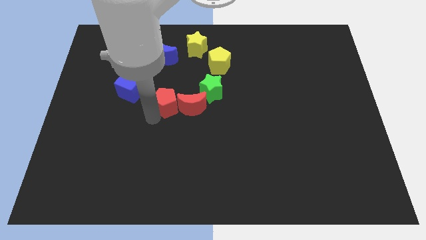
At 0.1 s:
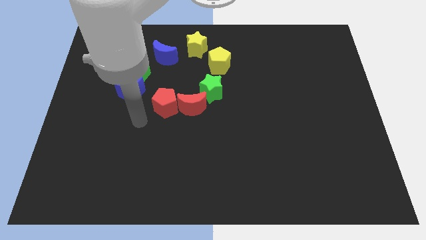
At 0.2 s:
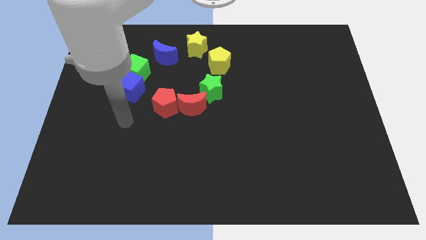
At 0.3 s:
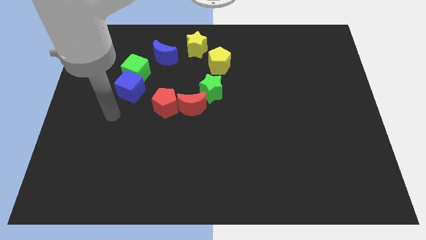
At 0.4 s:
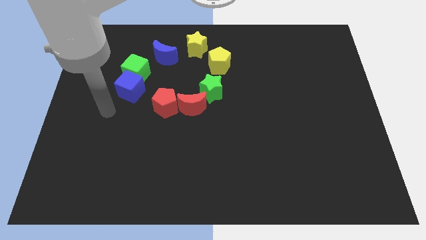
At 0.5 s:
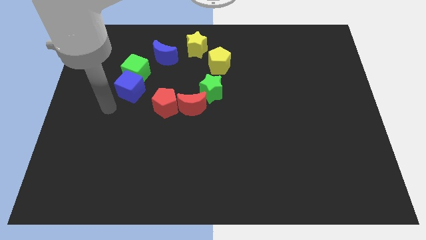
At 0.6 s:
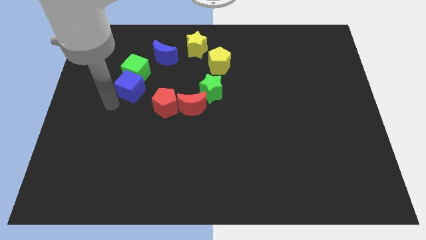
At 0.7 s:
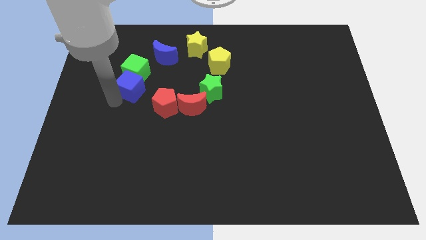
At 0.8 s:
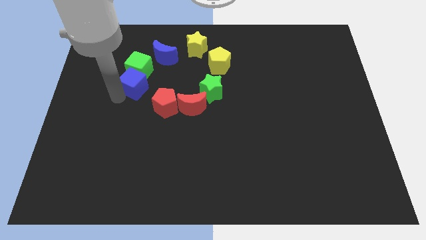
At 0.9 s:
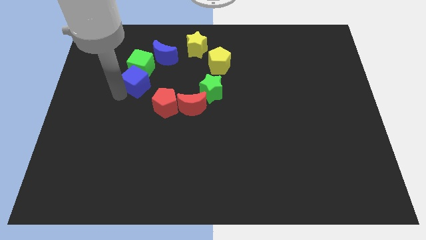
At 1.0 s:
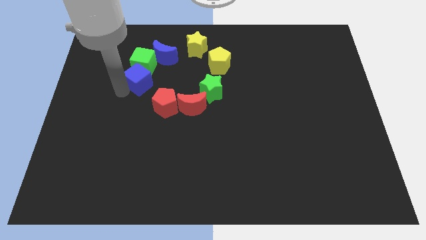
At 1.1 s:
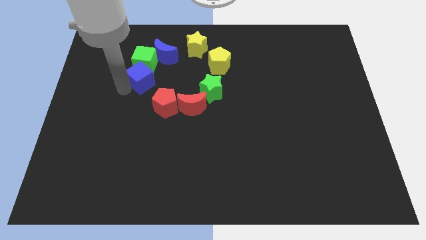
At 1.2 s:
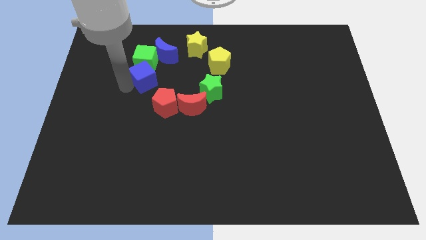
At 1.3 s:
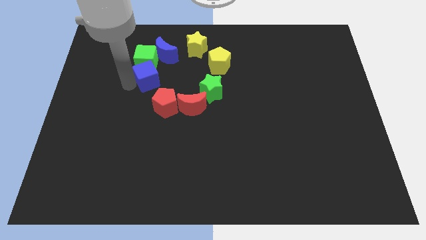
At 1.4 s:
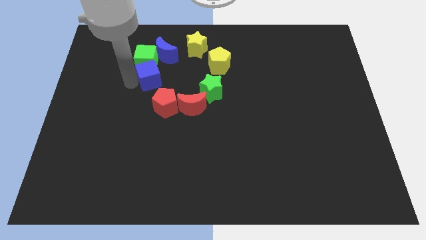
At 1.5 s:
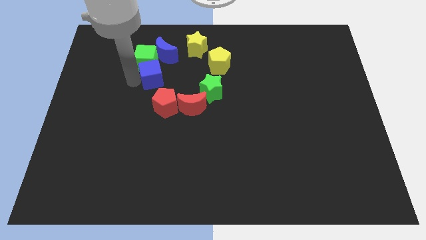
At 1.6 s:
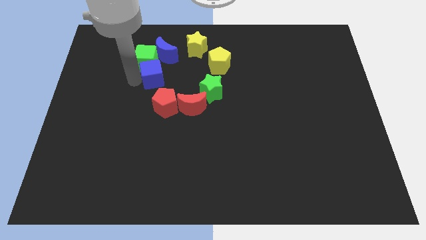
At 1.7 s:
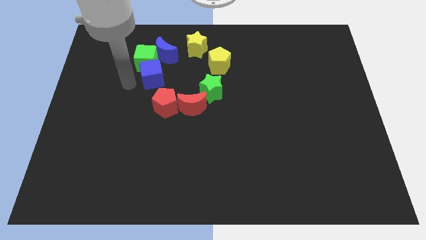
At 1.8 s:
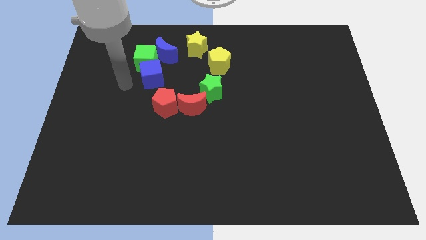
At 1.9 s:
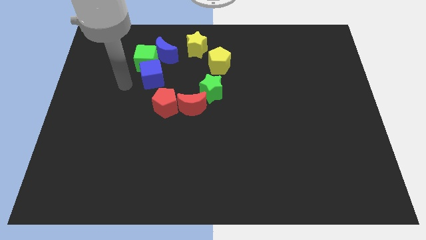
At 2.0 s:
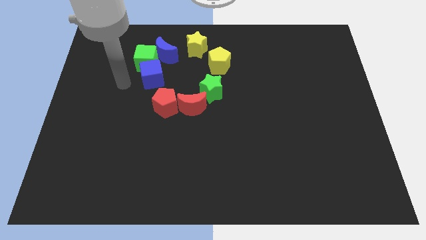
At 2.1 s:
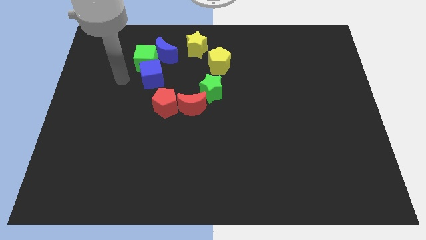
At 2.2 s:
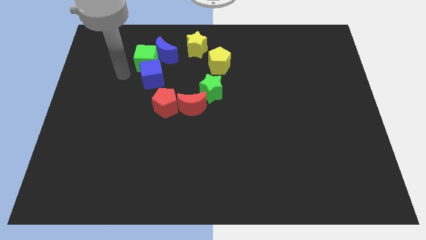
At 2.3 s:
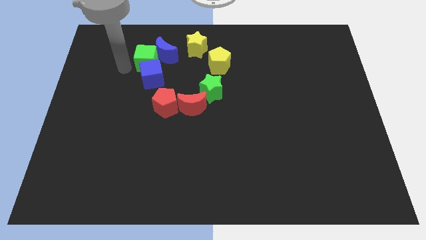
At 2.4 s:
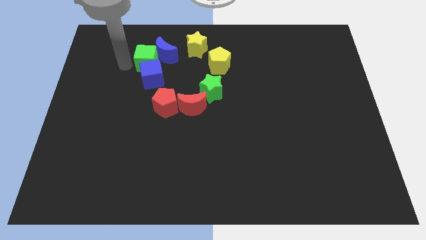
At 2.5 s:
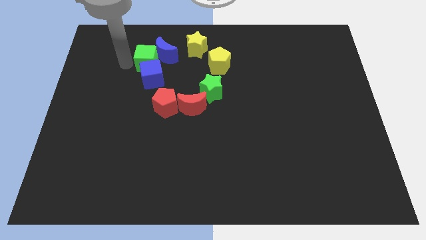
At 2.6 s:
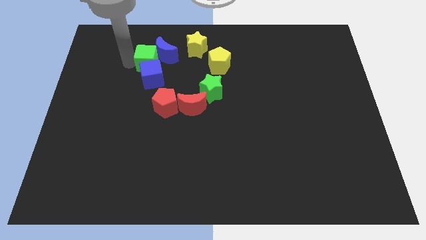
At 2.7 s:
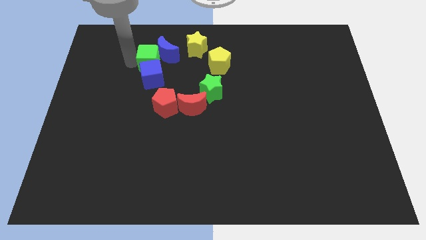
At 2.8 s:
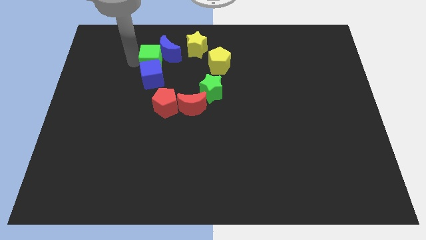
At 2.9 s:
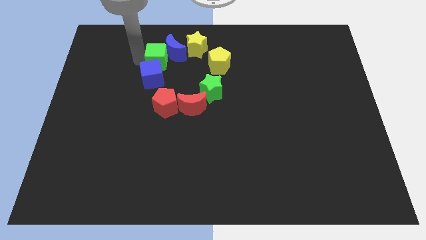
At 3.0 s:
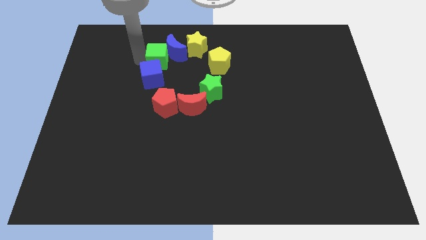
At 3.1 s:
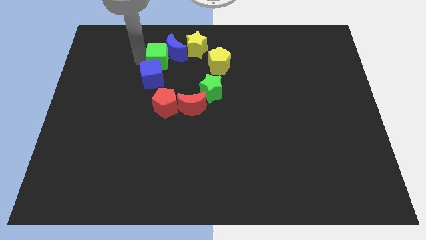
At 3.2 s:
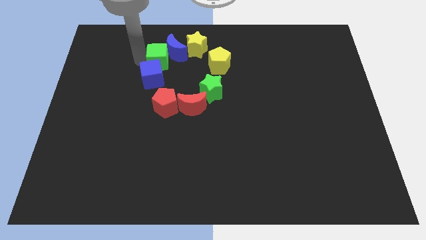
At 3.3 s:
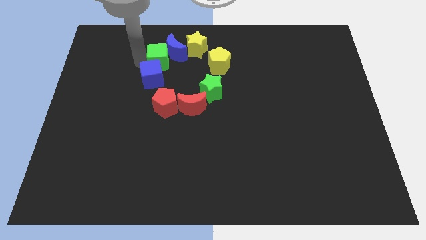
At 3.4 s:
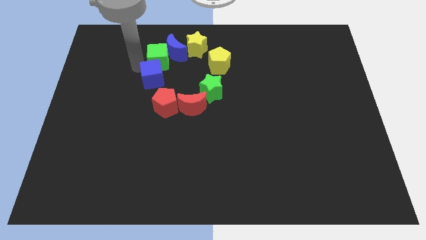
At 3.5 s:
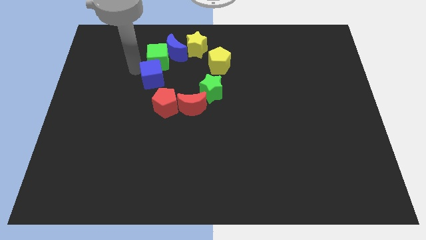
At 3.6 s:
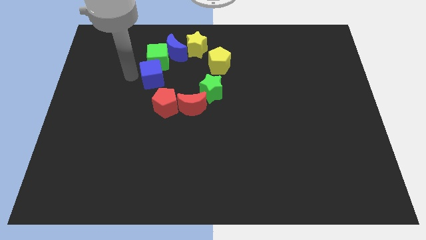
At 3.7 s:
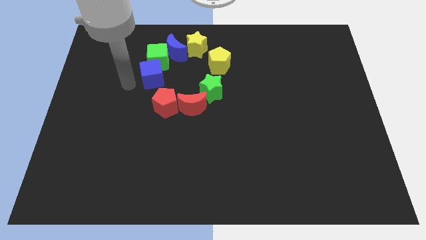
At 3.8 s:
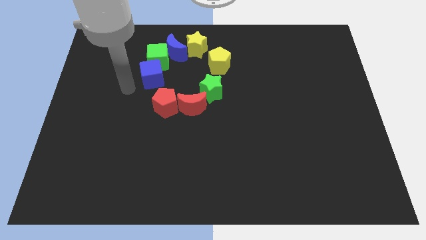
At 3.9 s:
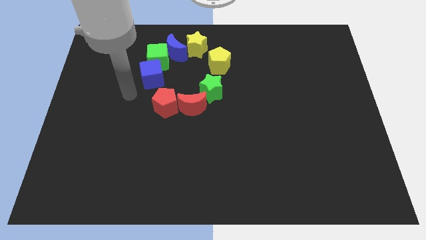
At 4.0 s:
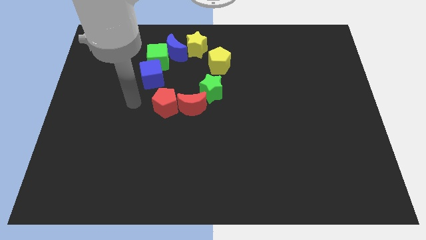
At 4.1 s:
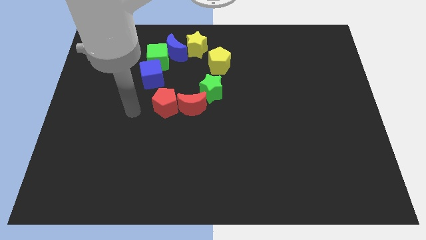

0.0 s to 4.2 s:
push the blue cube and green cube upwards together slightly

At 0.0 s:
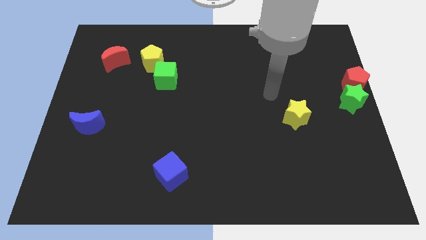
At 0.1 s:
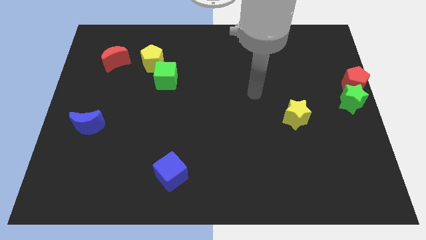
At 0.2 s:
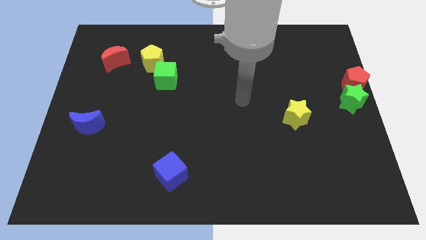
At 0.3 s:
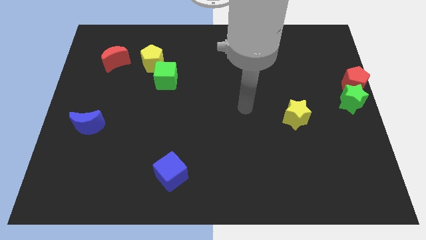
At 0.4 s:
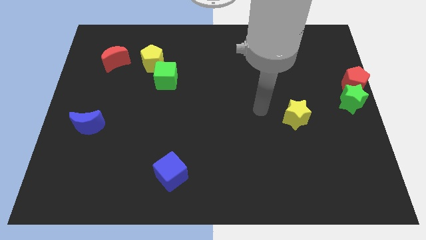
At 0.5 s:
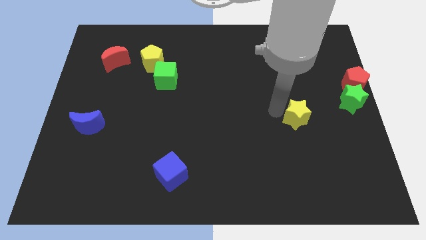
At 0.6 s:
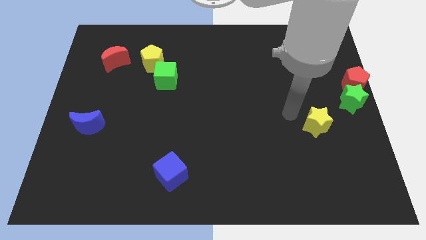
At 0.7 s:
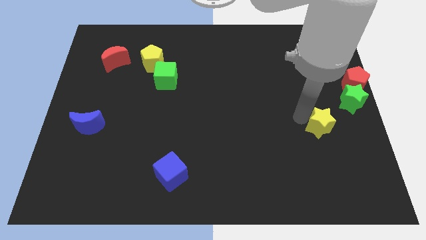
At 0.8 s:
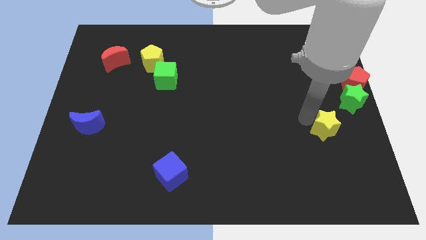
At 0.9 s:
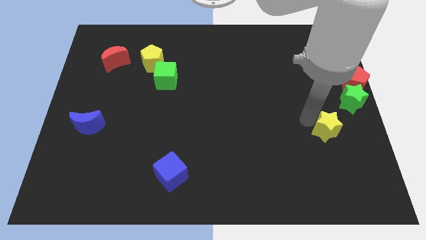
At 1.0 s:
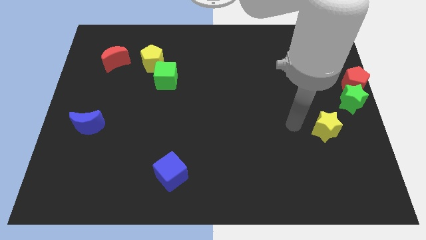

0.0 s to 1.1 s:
place the yellow star horizontally to the right side of the blue crescent

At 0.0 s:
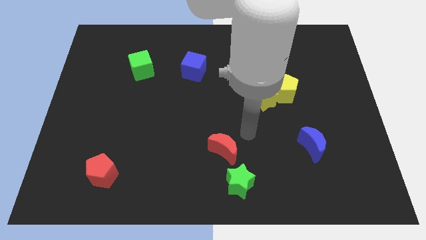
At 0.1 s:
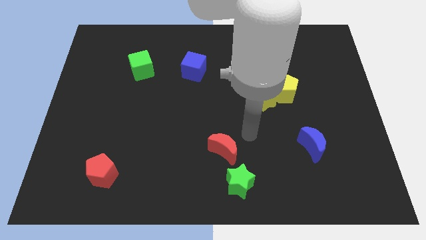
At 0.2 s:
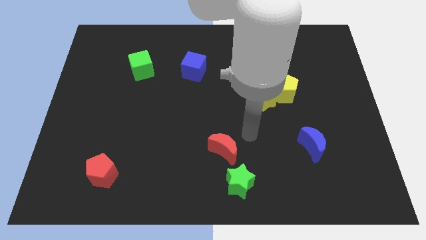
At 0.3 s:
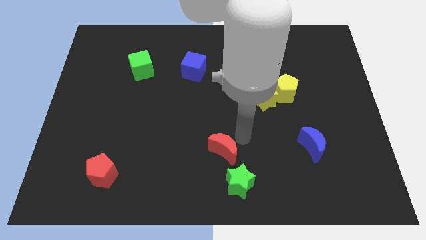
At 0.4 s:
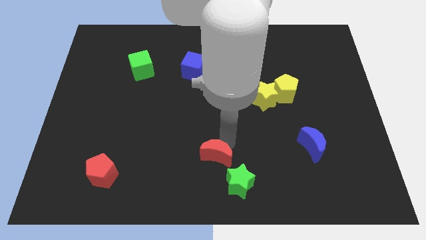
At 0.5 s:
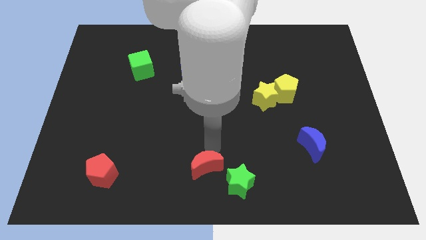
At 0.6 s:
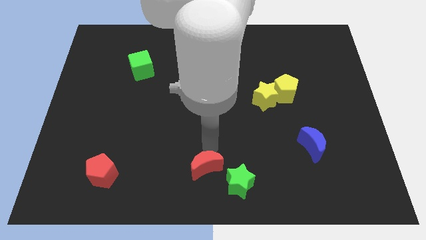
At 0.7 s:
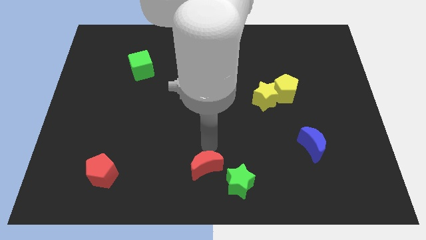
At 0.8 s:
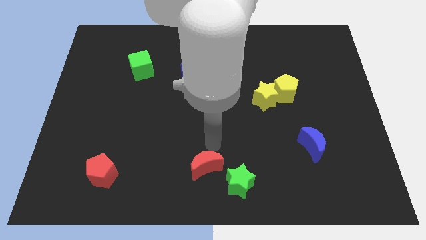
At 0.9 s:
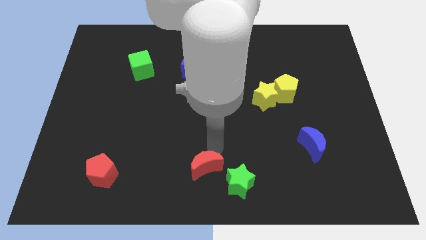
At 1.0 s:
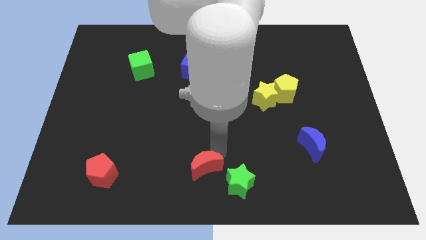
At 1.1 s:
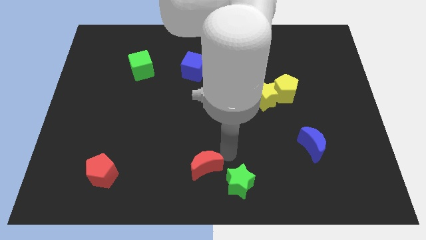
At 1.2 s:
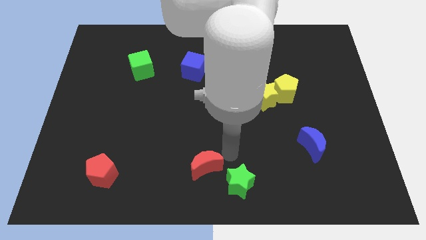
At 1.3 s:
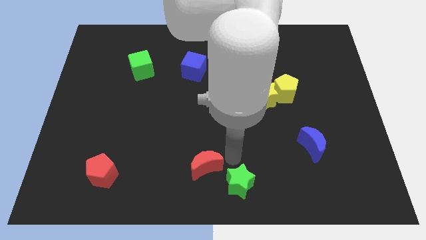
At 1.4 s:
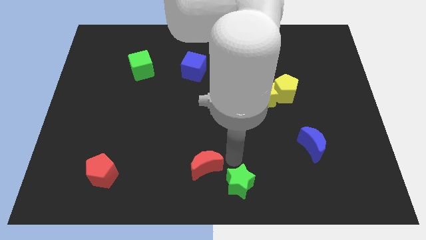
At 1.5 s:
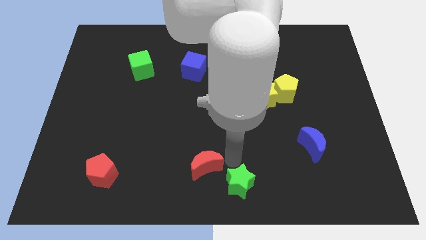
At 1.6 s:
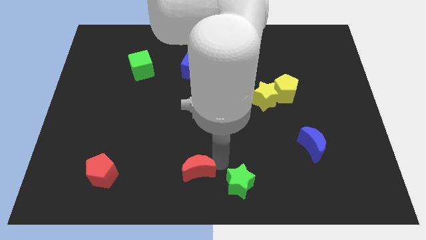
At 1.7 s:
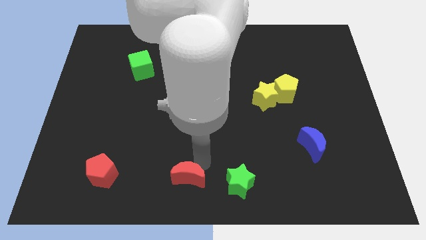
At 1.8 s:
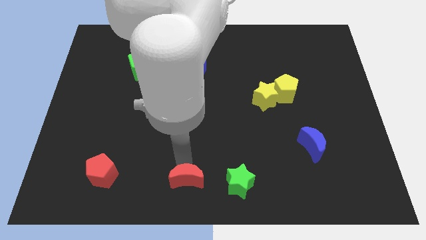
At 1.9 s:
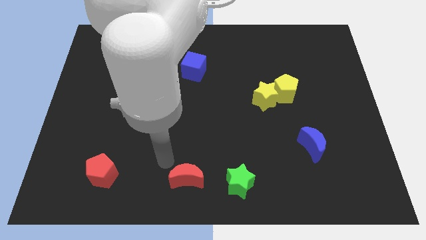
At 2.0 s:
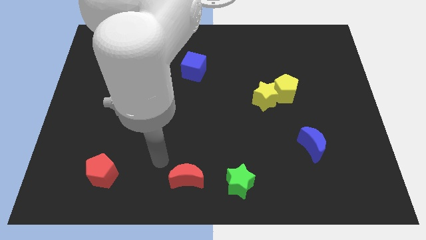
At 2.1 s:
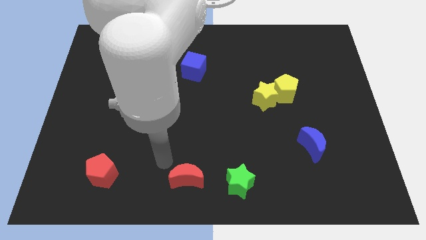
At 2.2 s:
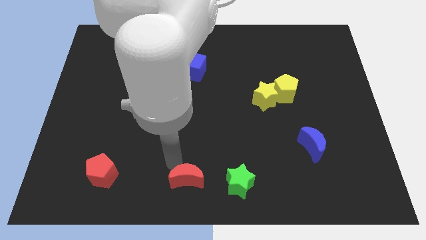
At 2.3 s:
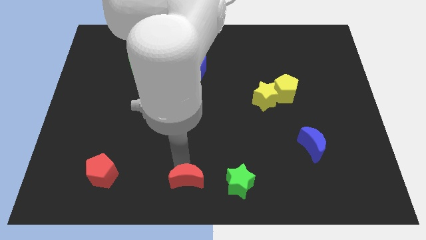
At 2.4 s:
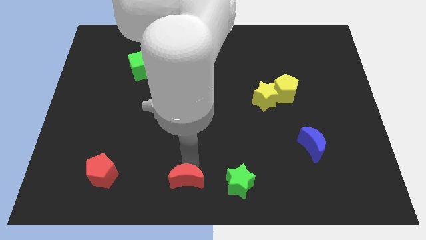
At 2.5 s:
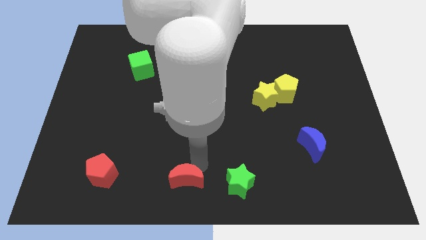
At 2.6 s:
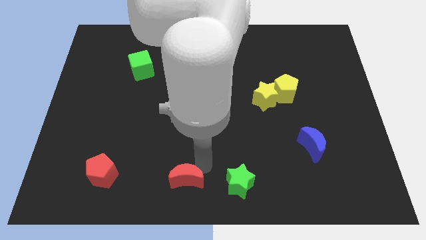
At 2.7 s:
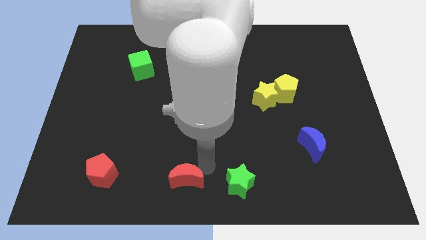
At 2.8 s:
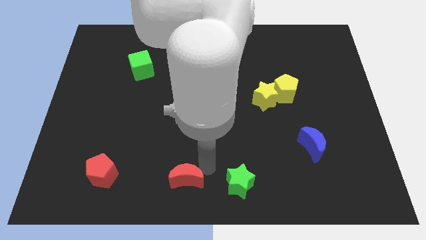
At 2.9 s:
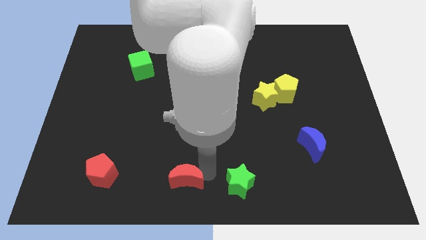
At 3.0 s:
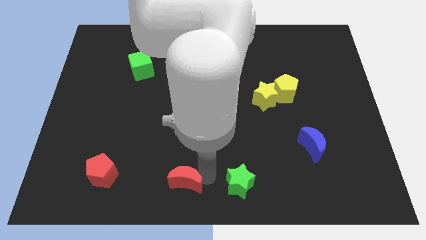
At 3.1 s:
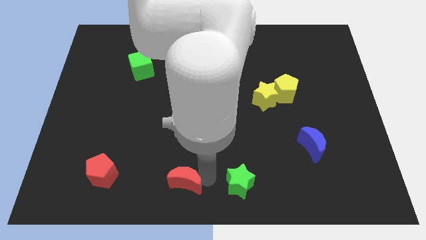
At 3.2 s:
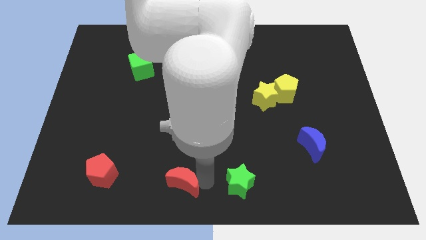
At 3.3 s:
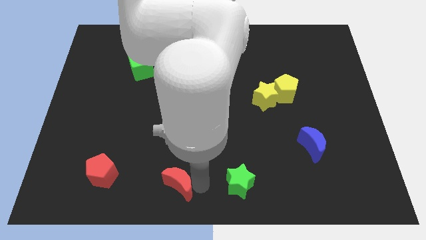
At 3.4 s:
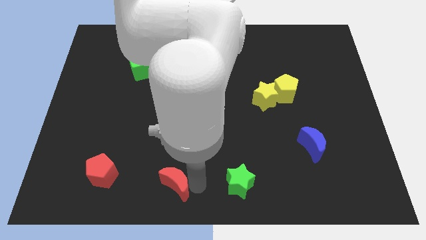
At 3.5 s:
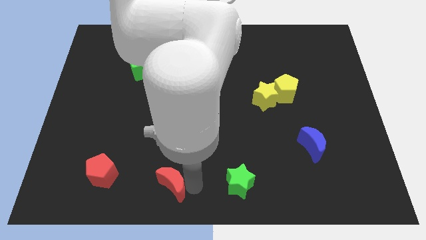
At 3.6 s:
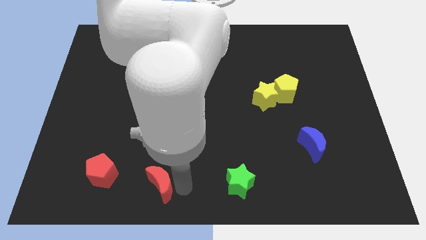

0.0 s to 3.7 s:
place the red moon to the left of the green star
